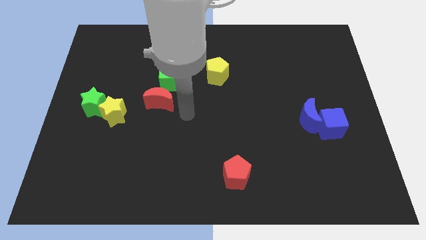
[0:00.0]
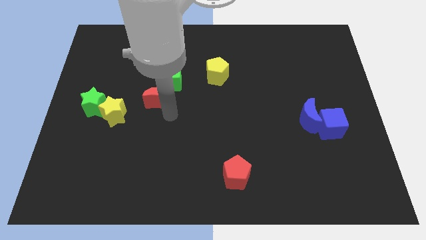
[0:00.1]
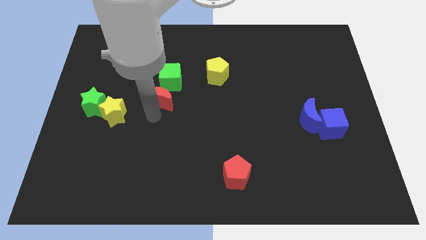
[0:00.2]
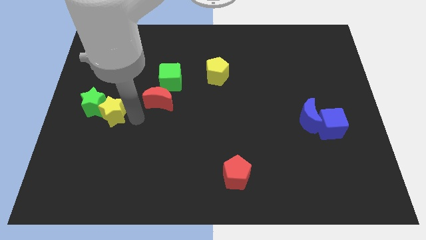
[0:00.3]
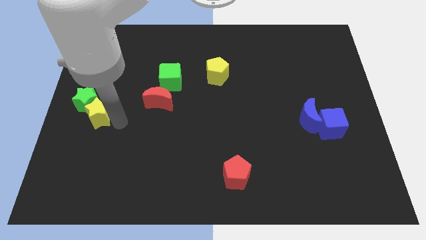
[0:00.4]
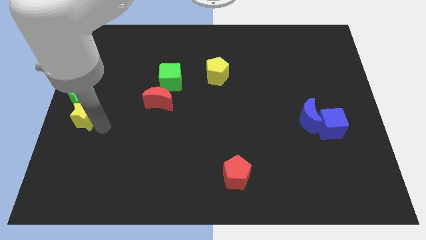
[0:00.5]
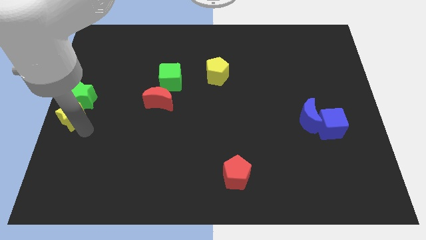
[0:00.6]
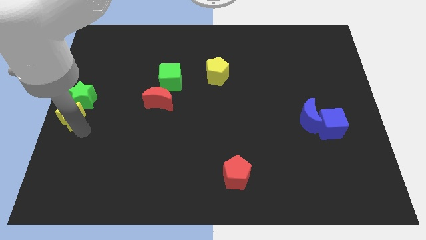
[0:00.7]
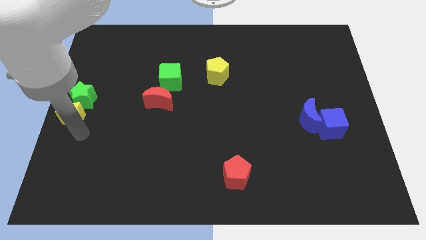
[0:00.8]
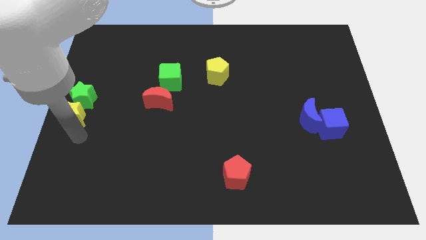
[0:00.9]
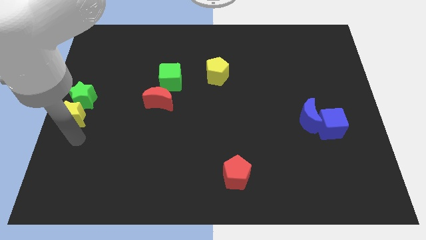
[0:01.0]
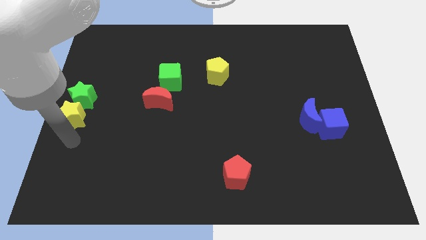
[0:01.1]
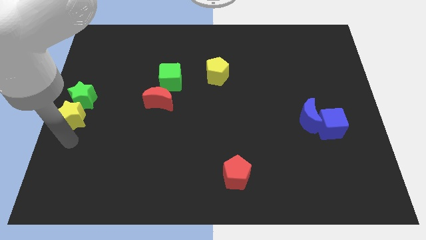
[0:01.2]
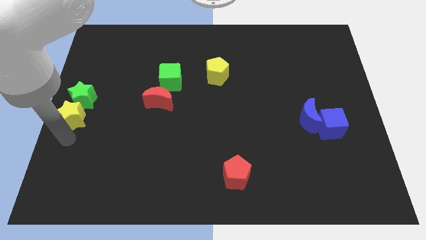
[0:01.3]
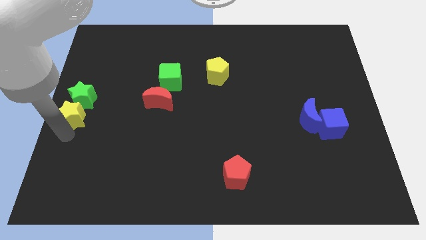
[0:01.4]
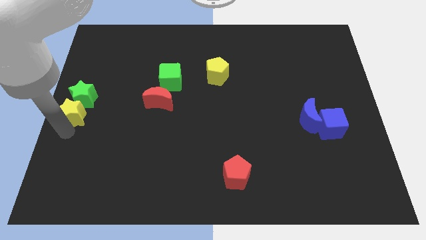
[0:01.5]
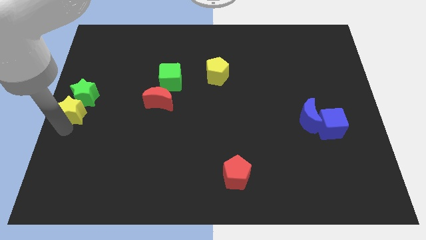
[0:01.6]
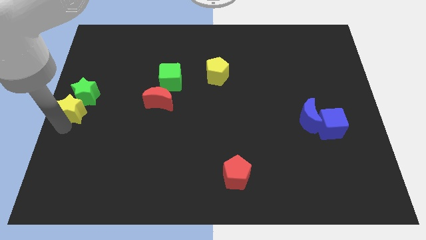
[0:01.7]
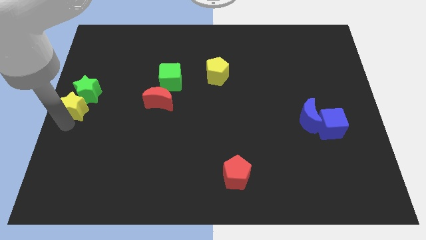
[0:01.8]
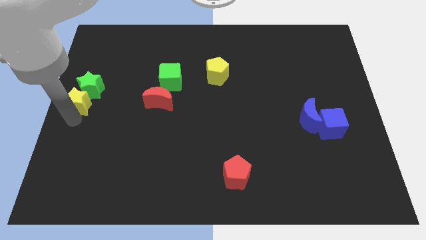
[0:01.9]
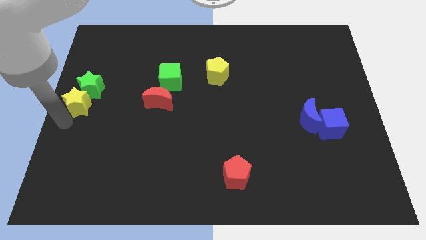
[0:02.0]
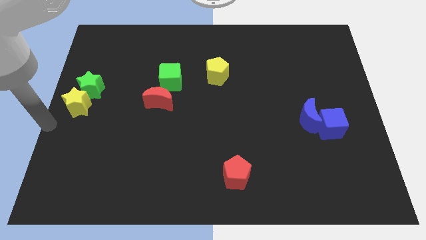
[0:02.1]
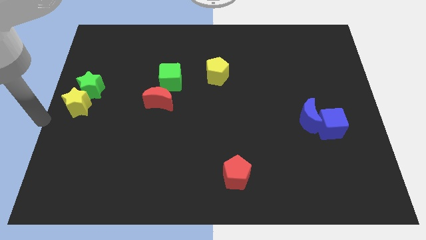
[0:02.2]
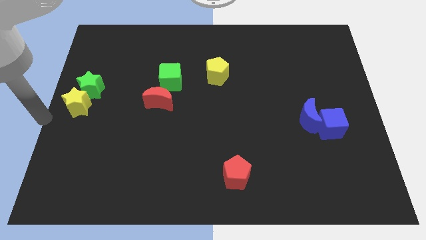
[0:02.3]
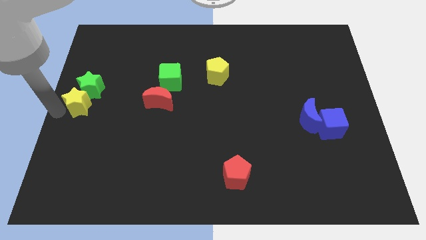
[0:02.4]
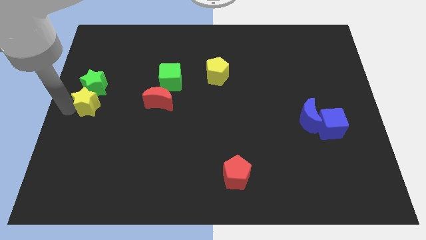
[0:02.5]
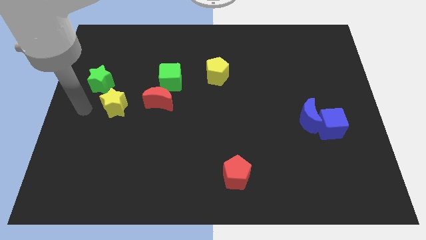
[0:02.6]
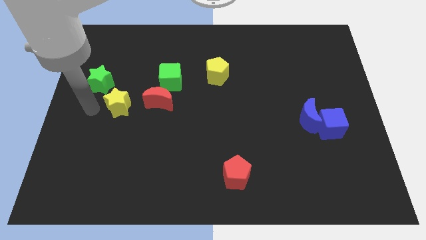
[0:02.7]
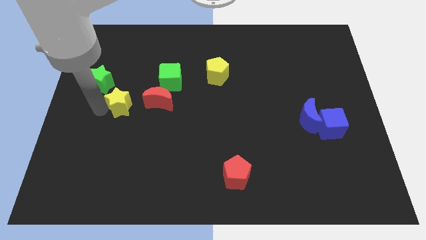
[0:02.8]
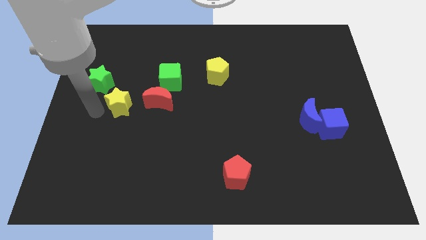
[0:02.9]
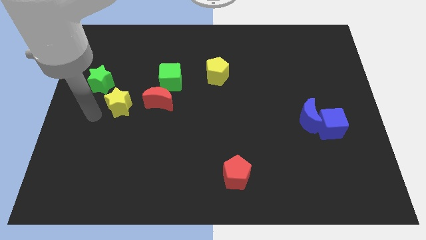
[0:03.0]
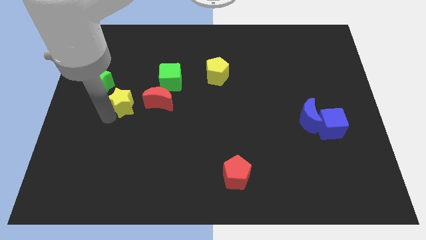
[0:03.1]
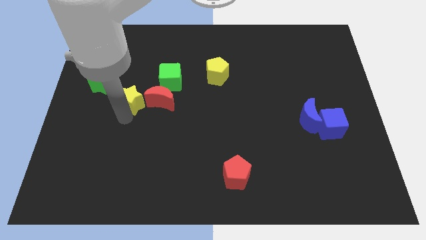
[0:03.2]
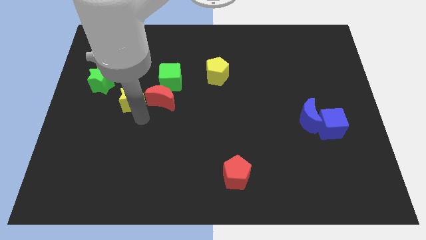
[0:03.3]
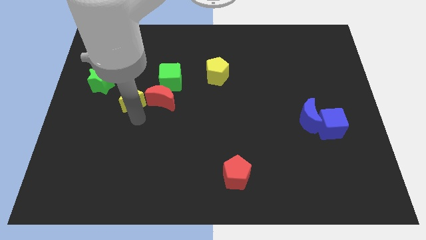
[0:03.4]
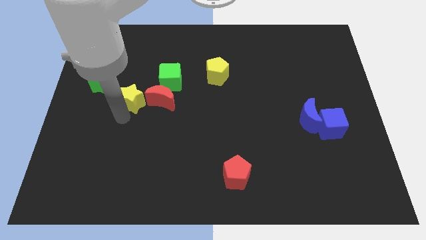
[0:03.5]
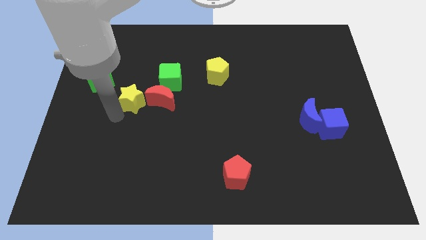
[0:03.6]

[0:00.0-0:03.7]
push the yellow star into the red crescent

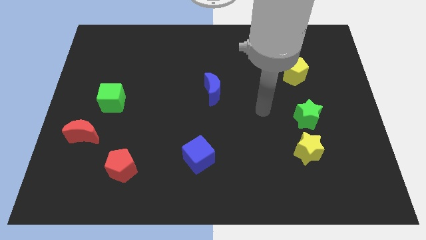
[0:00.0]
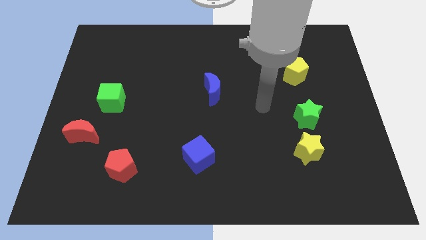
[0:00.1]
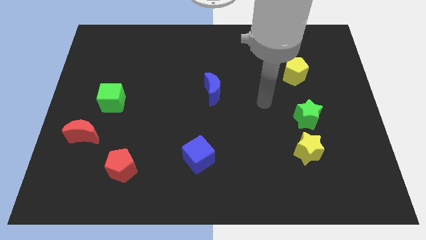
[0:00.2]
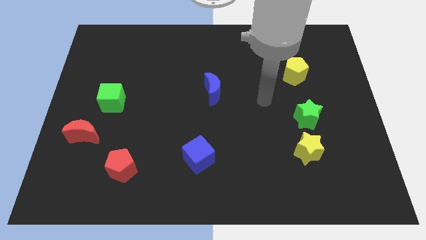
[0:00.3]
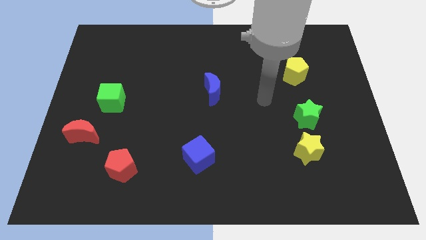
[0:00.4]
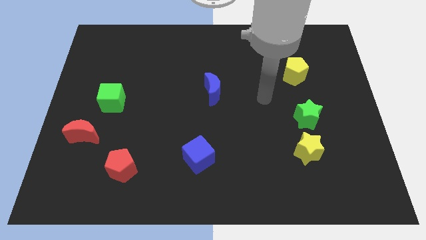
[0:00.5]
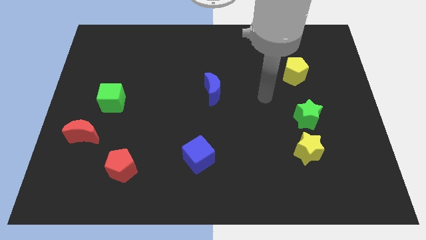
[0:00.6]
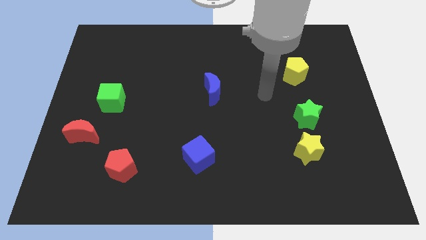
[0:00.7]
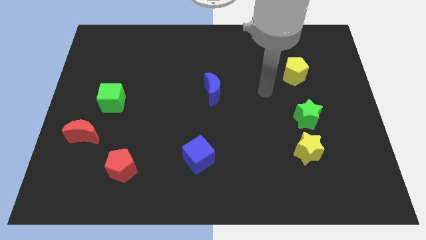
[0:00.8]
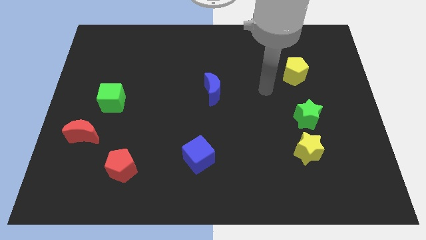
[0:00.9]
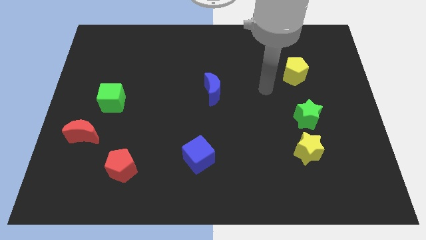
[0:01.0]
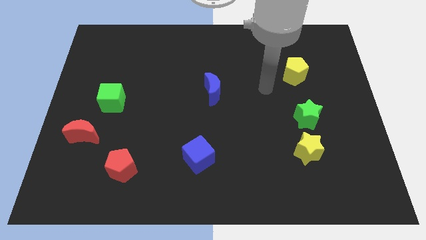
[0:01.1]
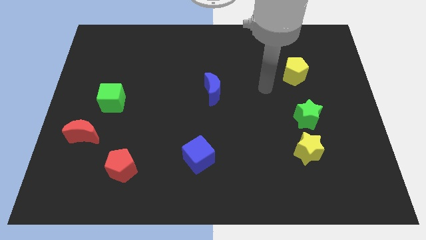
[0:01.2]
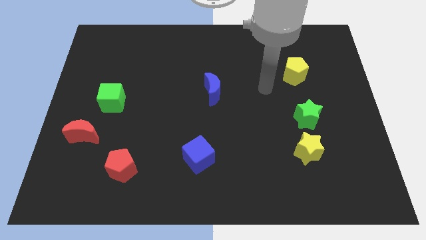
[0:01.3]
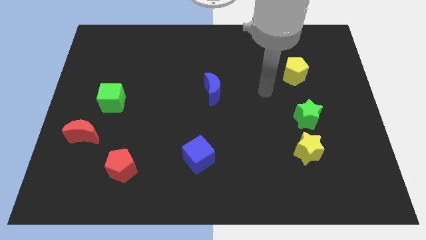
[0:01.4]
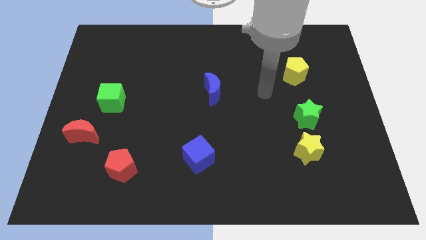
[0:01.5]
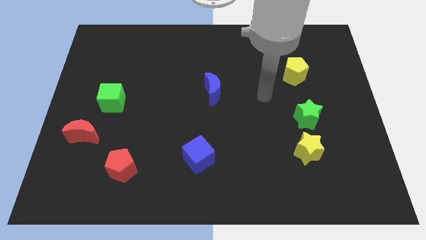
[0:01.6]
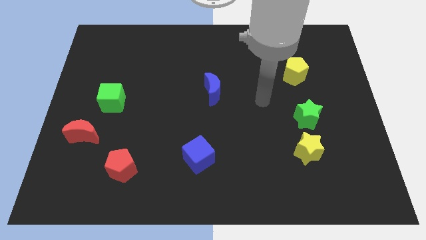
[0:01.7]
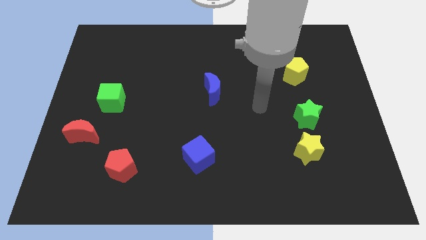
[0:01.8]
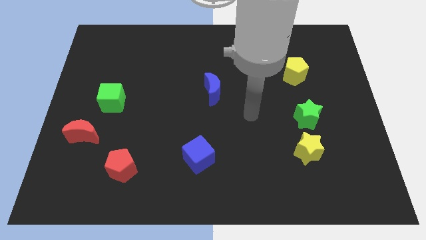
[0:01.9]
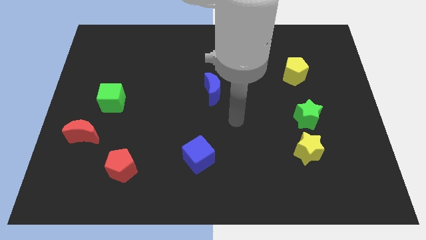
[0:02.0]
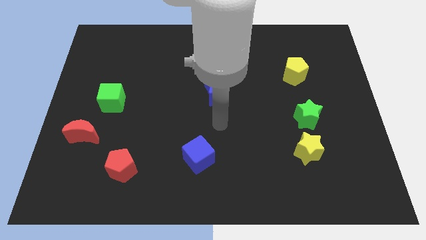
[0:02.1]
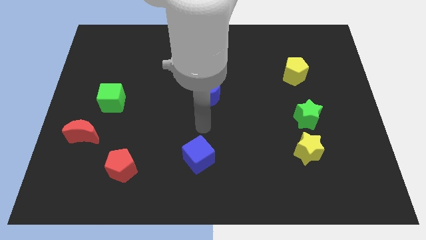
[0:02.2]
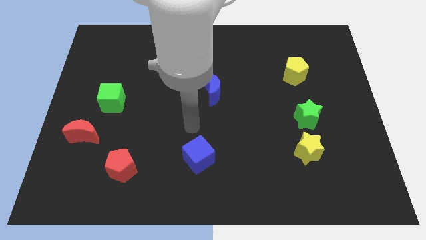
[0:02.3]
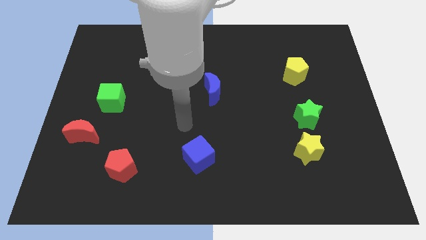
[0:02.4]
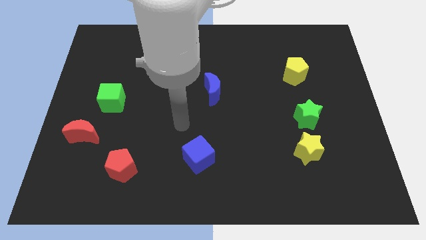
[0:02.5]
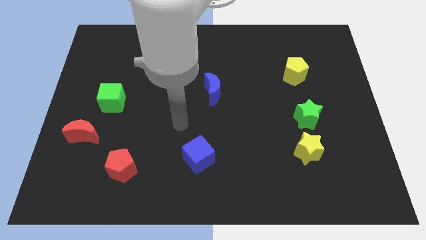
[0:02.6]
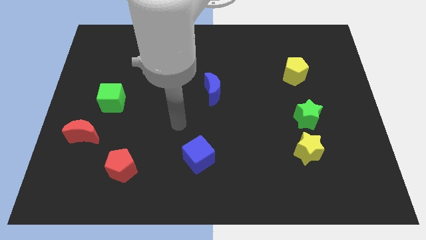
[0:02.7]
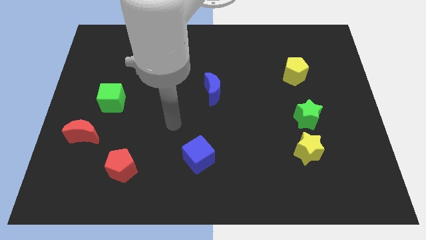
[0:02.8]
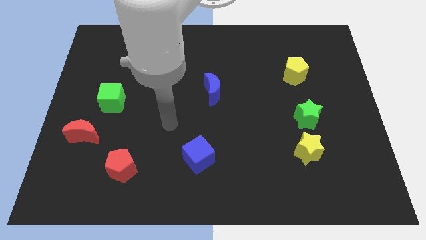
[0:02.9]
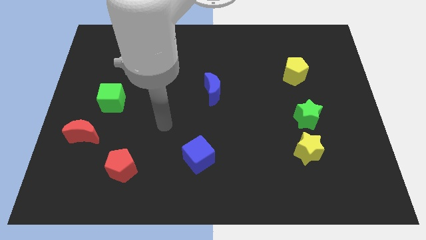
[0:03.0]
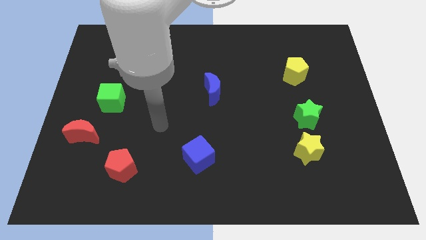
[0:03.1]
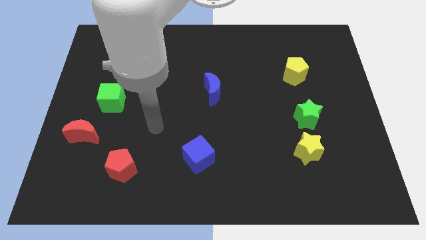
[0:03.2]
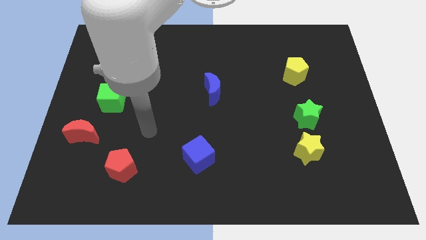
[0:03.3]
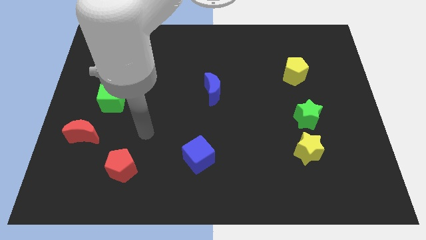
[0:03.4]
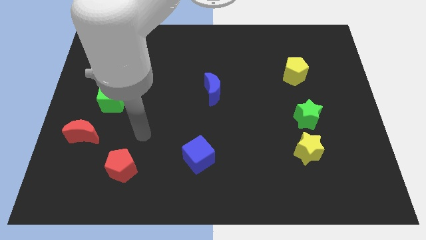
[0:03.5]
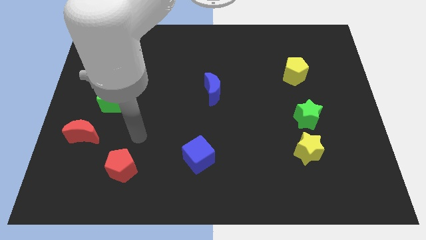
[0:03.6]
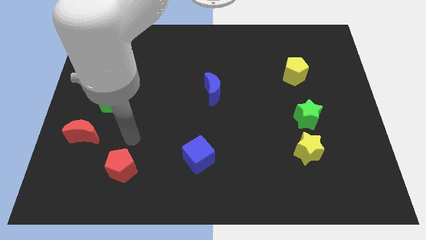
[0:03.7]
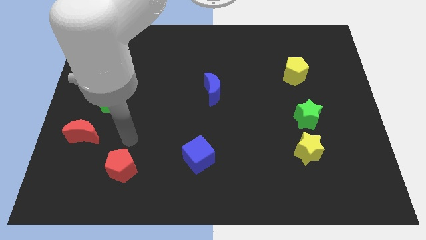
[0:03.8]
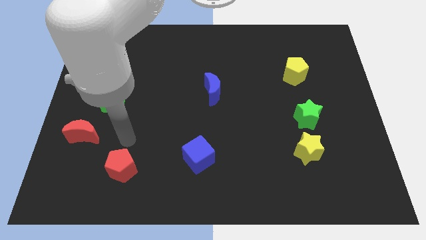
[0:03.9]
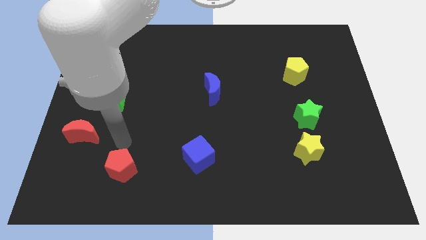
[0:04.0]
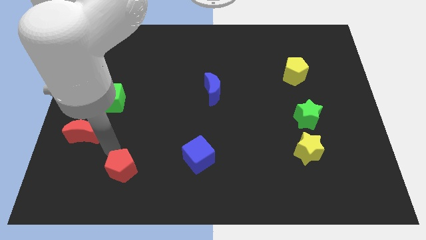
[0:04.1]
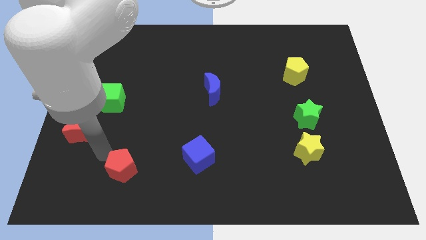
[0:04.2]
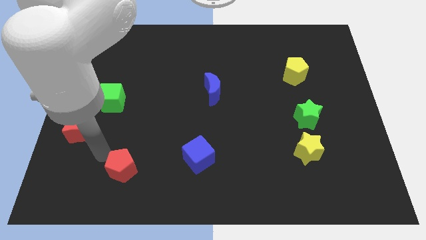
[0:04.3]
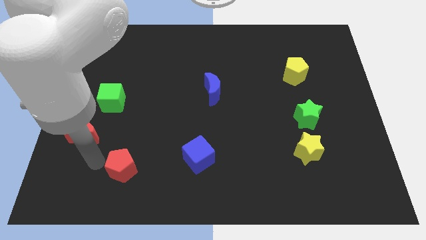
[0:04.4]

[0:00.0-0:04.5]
move your arm to the left of the red pentagon

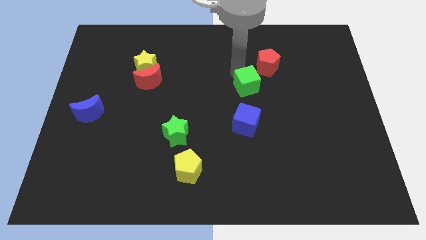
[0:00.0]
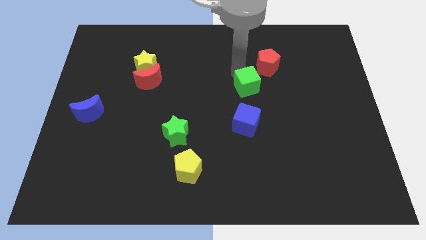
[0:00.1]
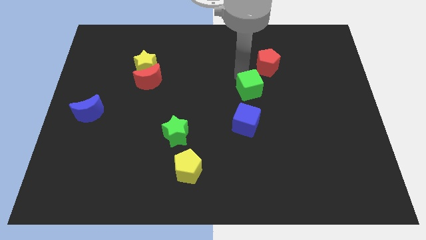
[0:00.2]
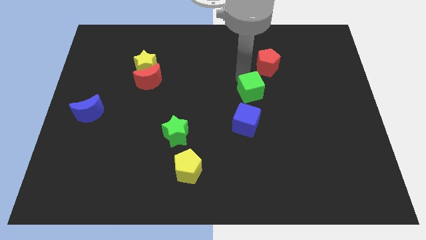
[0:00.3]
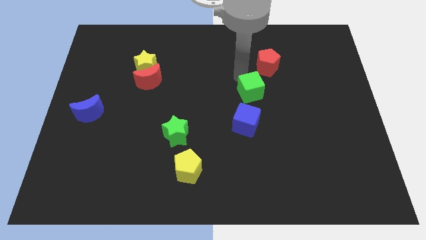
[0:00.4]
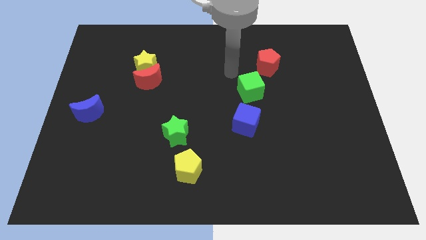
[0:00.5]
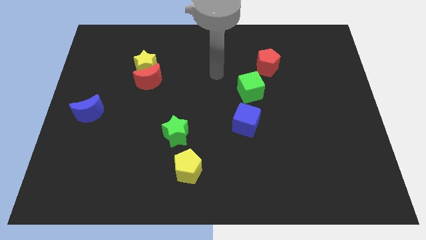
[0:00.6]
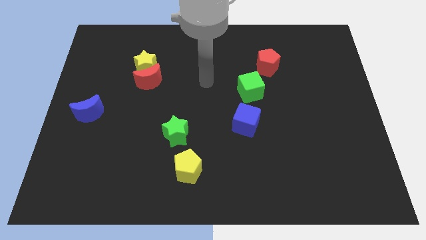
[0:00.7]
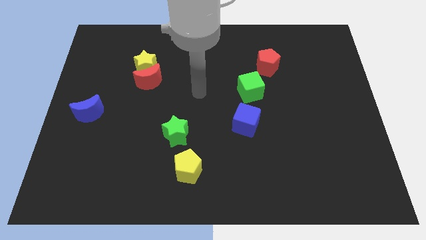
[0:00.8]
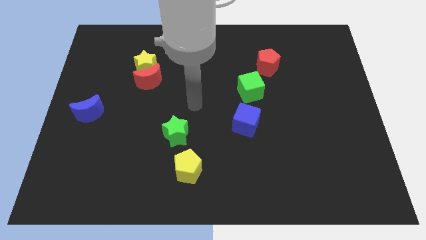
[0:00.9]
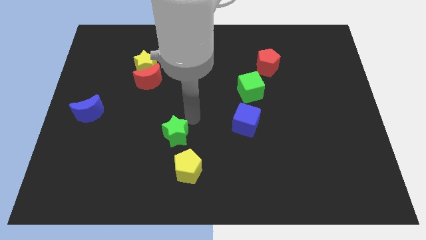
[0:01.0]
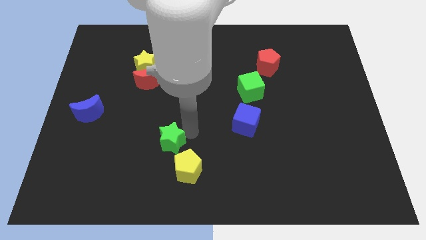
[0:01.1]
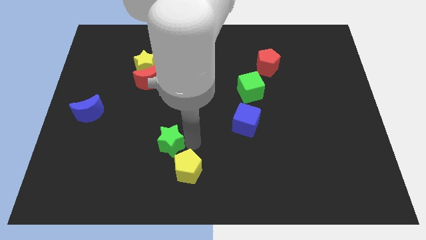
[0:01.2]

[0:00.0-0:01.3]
move your arm to the top of the green star
